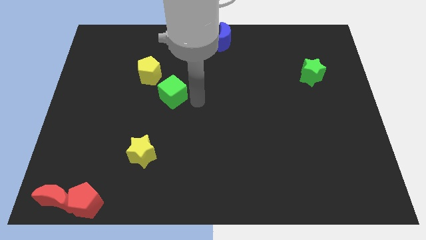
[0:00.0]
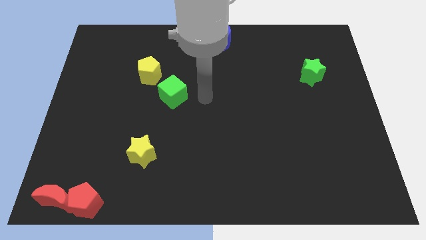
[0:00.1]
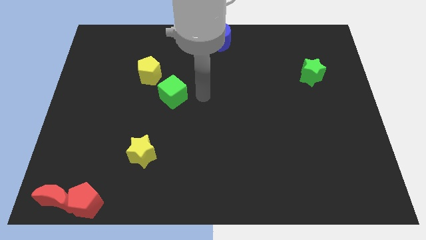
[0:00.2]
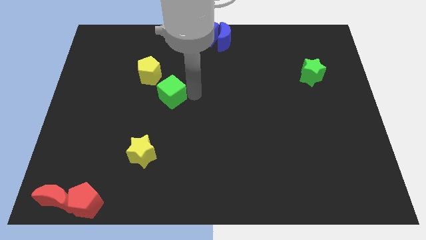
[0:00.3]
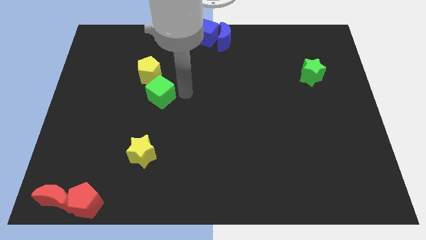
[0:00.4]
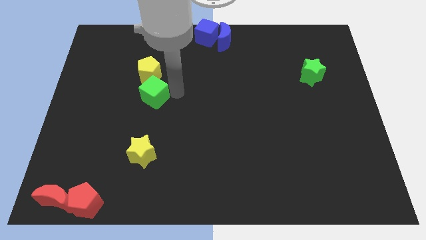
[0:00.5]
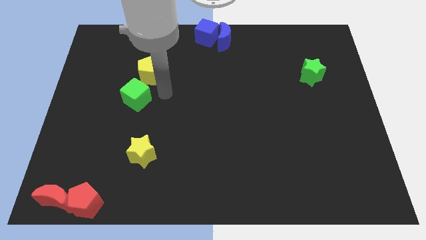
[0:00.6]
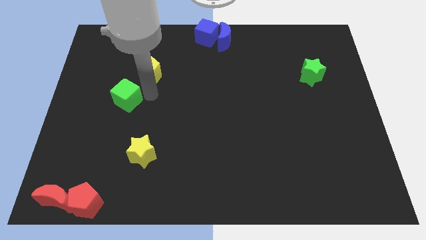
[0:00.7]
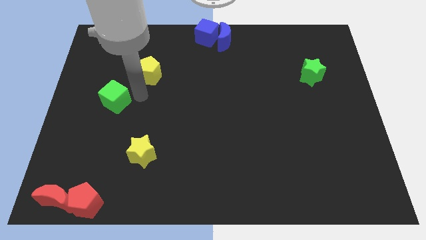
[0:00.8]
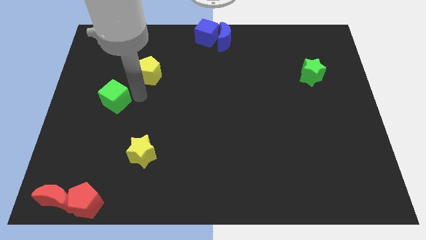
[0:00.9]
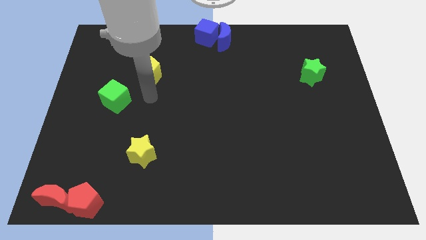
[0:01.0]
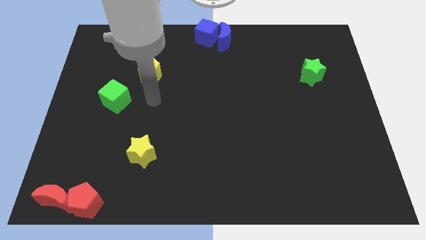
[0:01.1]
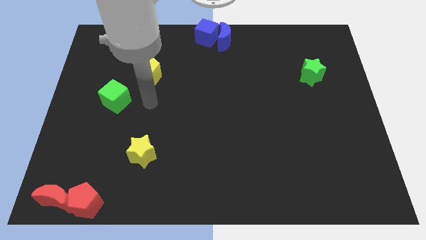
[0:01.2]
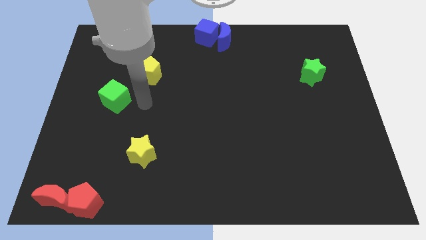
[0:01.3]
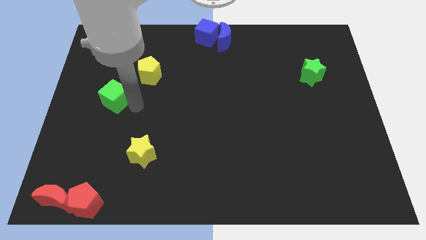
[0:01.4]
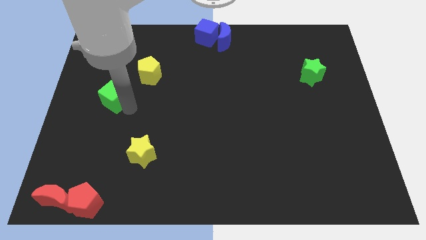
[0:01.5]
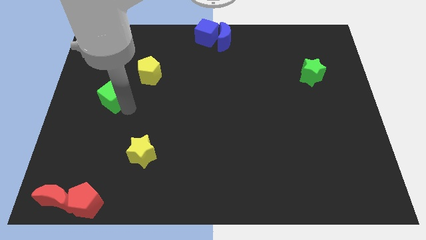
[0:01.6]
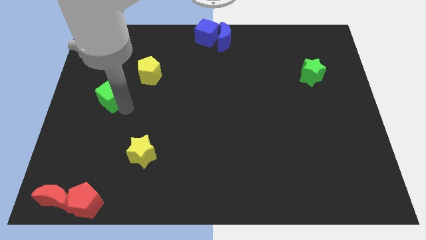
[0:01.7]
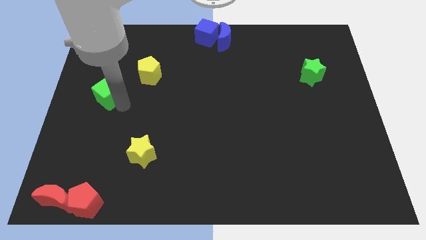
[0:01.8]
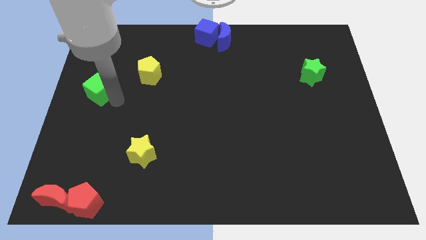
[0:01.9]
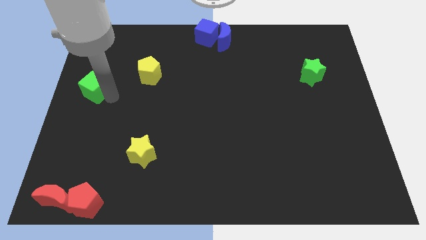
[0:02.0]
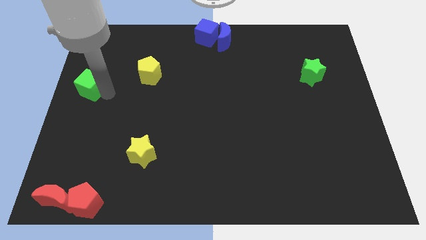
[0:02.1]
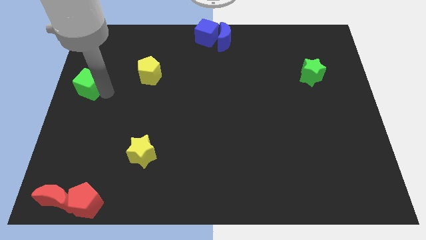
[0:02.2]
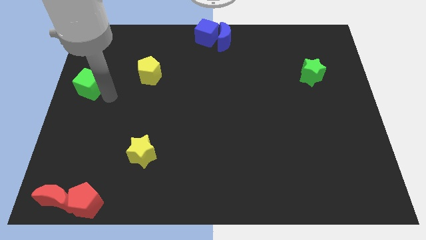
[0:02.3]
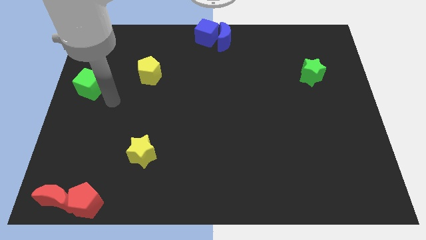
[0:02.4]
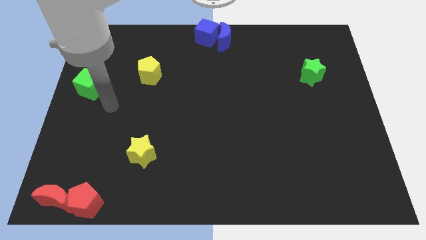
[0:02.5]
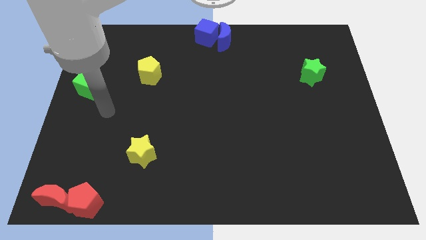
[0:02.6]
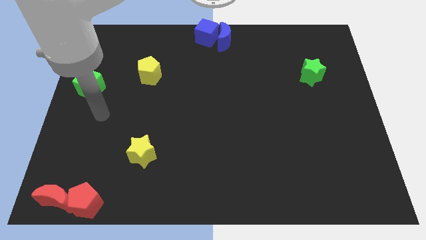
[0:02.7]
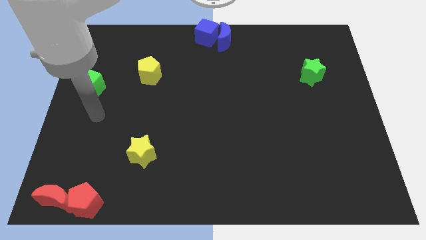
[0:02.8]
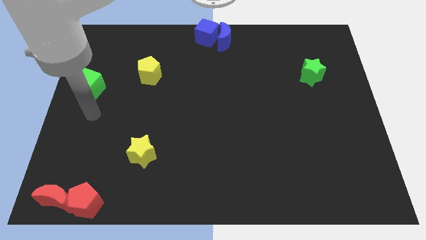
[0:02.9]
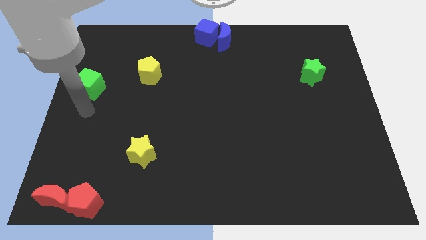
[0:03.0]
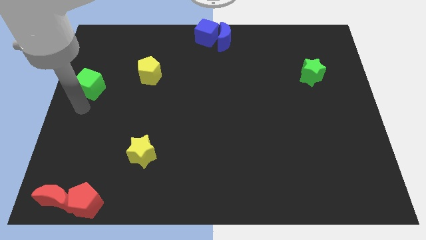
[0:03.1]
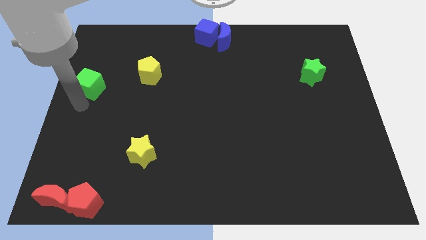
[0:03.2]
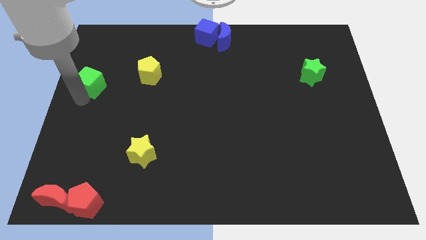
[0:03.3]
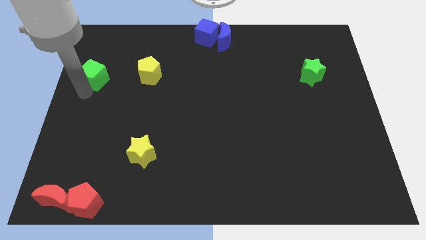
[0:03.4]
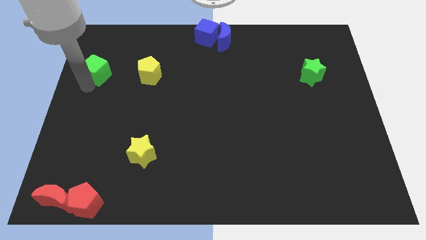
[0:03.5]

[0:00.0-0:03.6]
move the green cube to the left side of the yellow pentagon

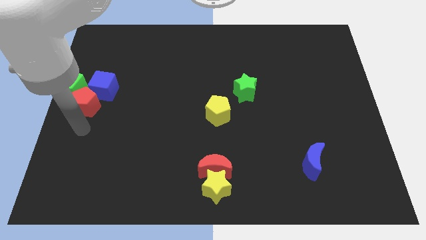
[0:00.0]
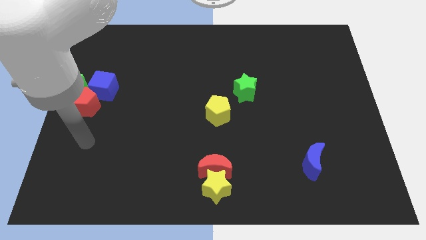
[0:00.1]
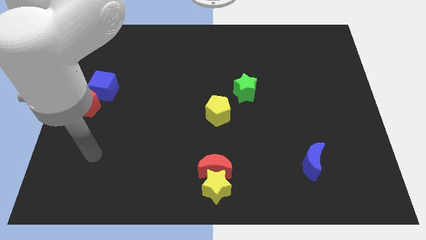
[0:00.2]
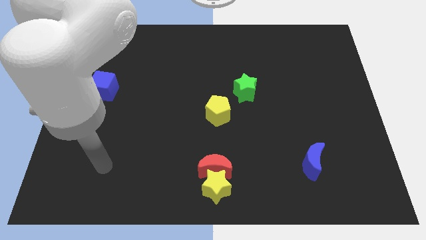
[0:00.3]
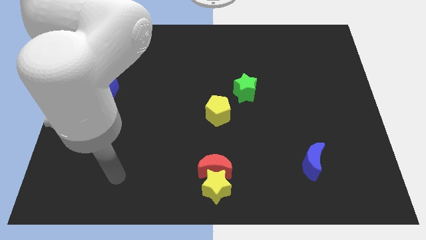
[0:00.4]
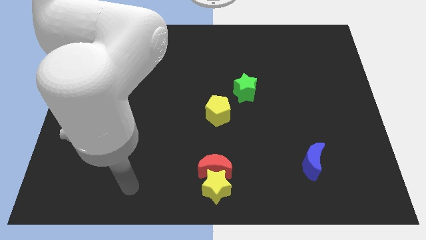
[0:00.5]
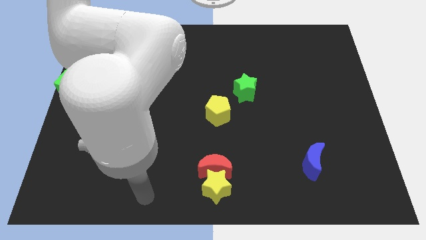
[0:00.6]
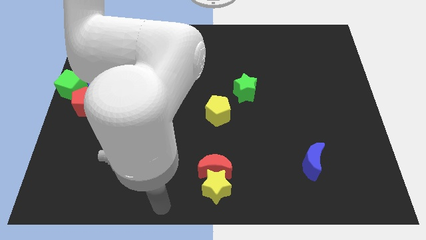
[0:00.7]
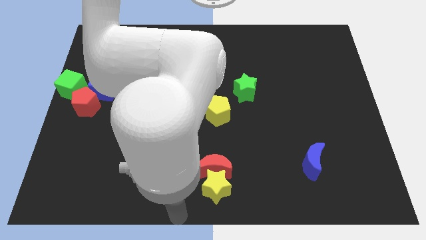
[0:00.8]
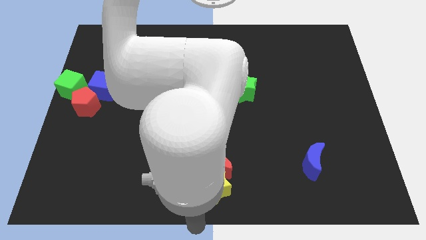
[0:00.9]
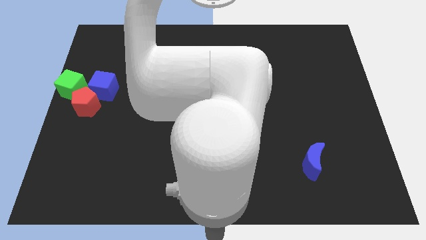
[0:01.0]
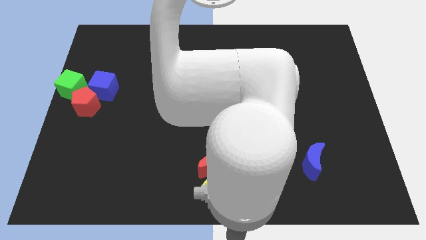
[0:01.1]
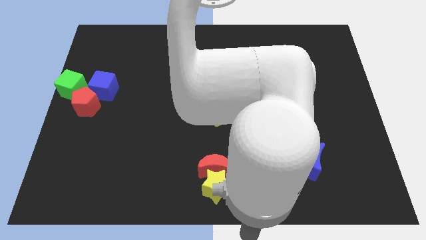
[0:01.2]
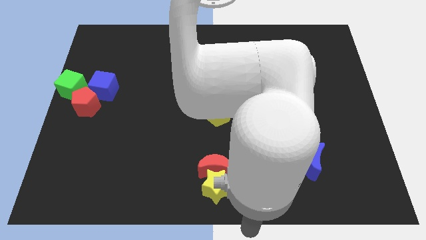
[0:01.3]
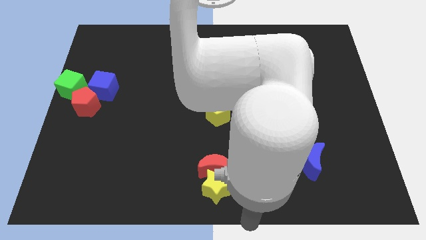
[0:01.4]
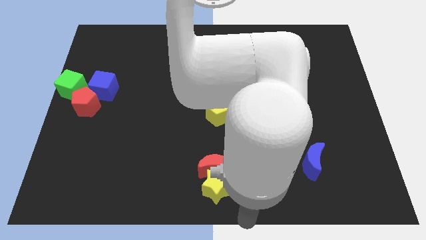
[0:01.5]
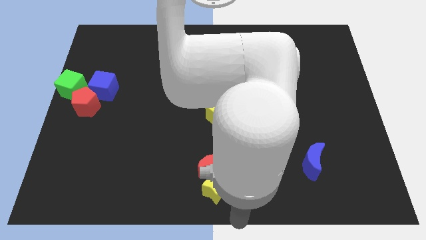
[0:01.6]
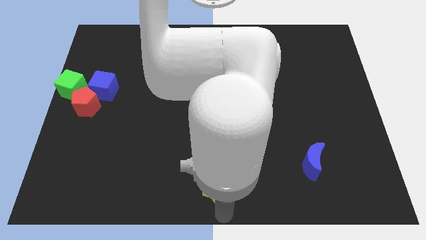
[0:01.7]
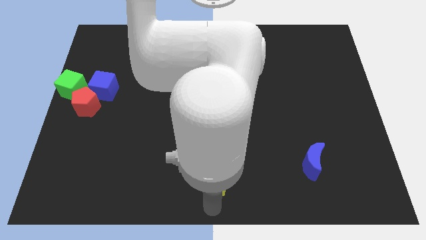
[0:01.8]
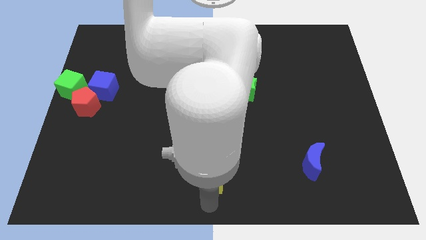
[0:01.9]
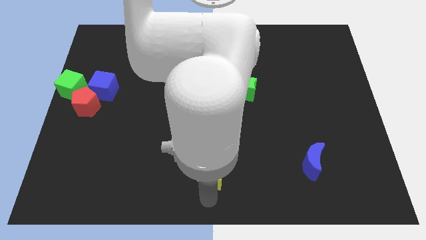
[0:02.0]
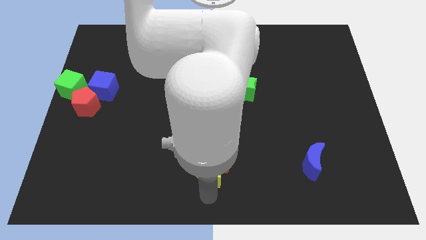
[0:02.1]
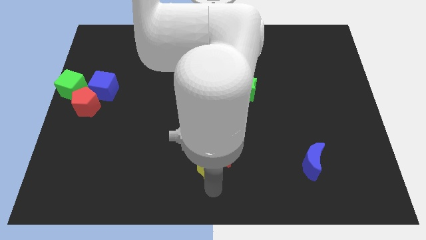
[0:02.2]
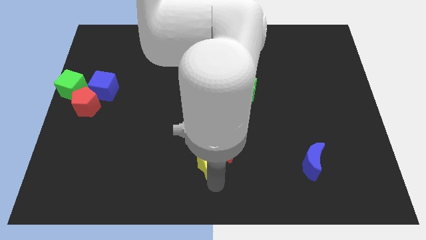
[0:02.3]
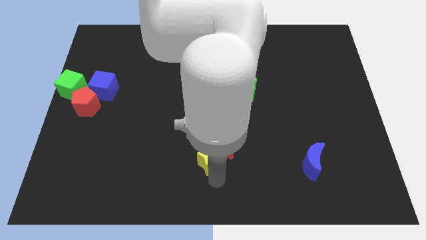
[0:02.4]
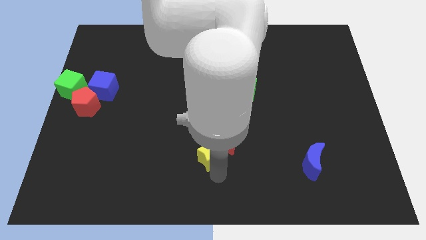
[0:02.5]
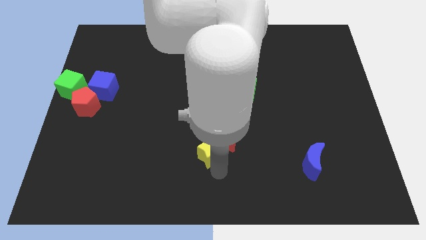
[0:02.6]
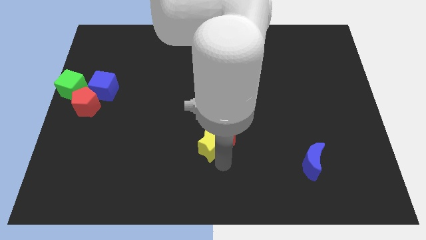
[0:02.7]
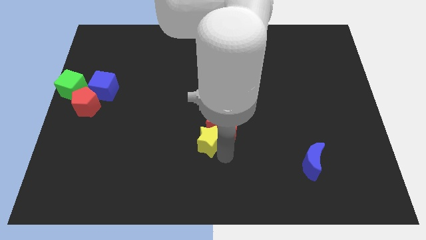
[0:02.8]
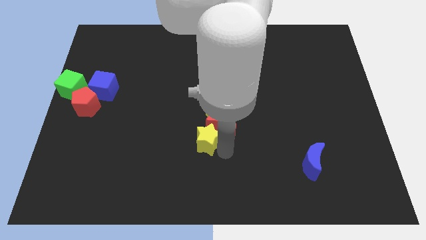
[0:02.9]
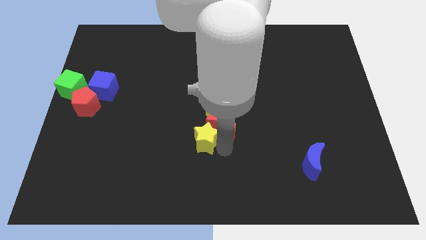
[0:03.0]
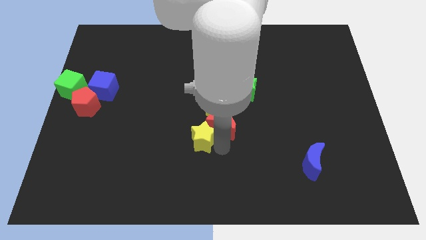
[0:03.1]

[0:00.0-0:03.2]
move the yellow star and the red moon towards the center of the board

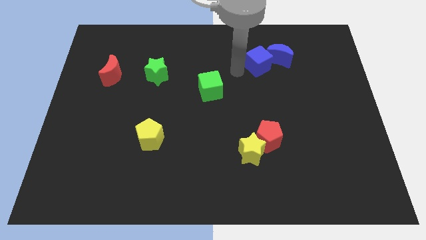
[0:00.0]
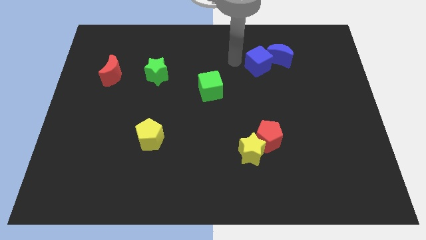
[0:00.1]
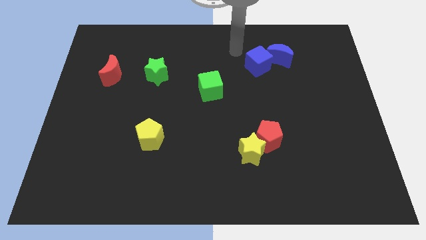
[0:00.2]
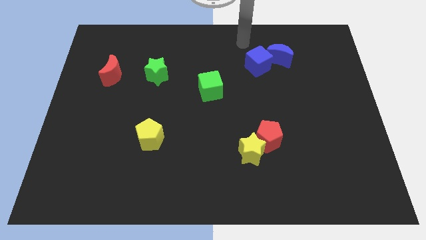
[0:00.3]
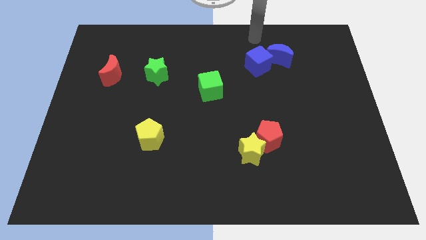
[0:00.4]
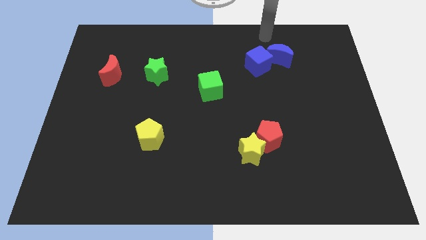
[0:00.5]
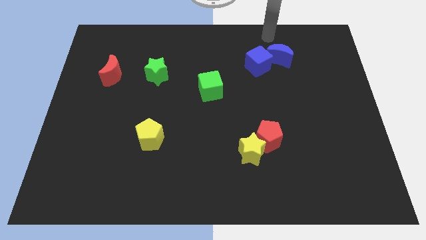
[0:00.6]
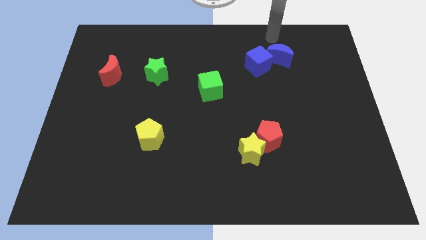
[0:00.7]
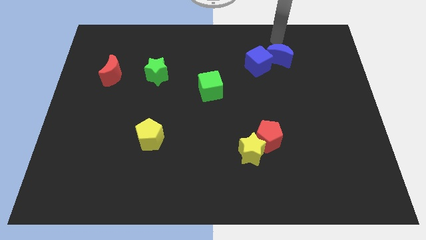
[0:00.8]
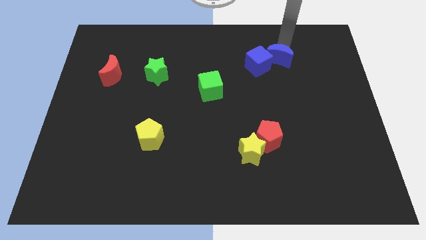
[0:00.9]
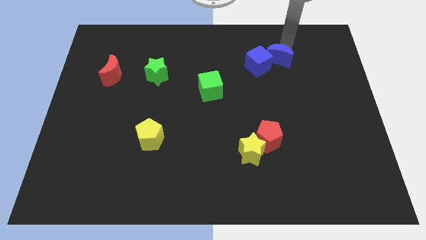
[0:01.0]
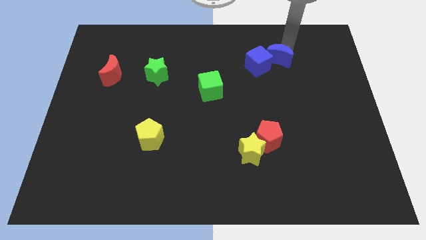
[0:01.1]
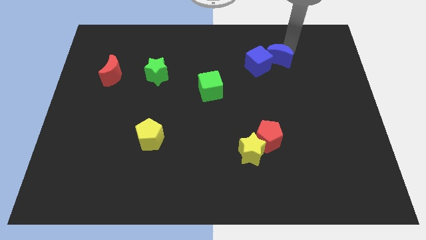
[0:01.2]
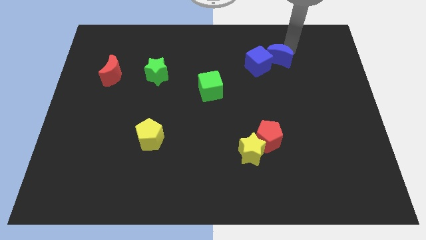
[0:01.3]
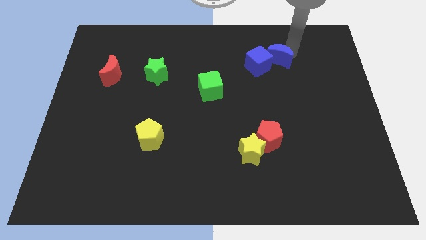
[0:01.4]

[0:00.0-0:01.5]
go near blue moon

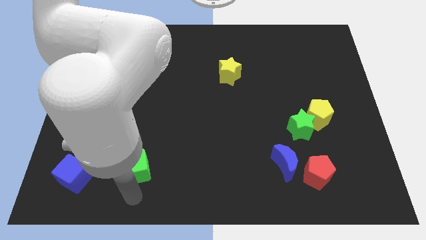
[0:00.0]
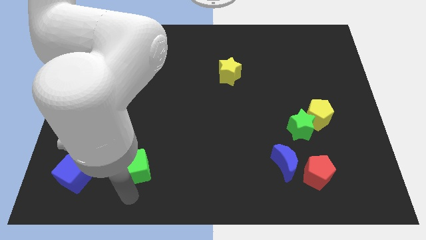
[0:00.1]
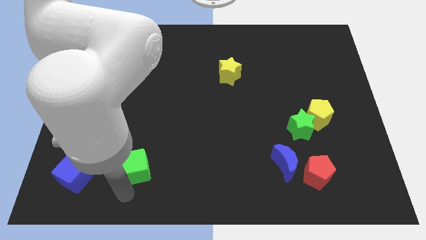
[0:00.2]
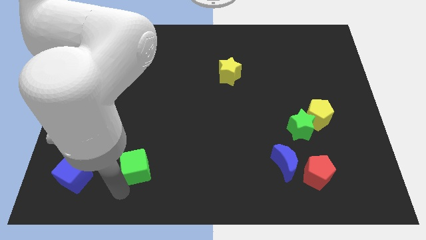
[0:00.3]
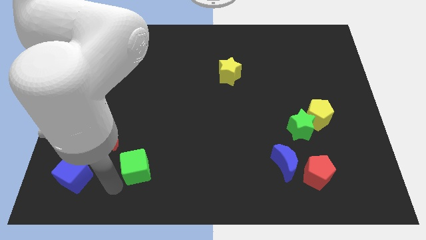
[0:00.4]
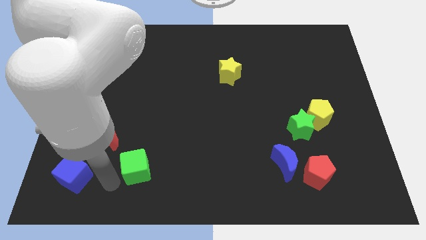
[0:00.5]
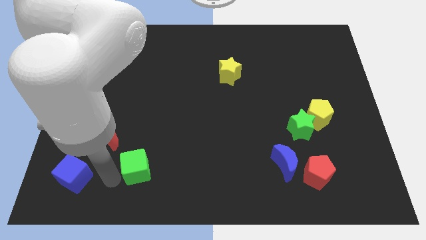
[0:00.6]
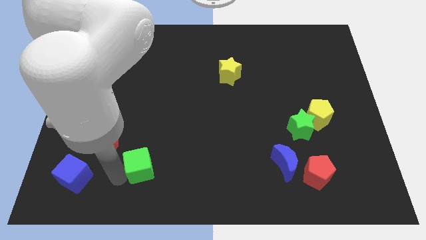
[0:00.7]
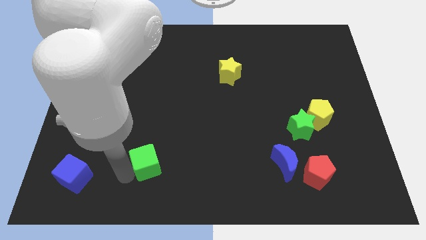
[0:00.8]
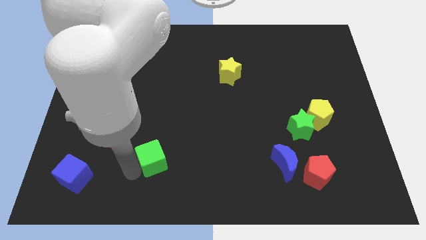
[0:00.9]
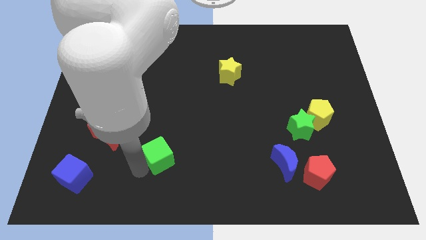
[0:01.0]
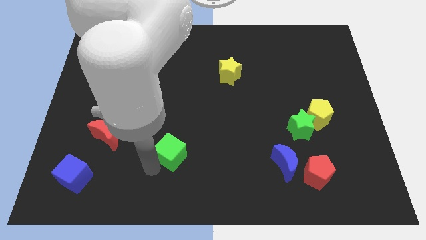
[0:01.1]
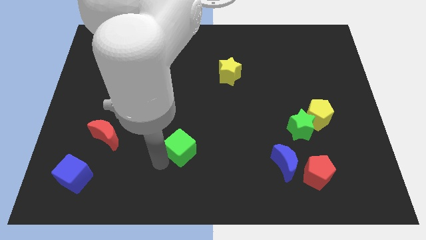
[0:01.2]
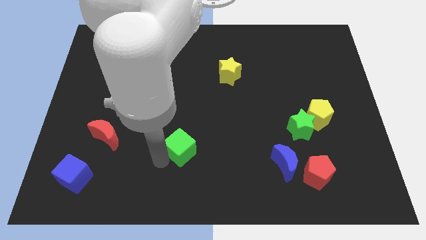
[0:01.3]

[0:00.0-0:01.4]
place the green cube in between the red and blue moons
